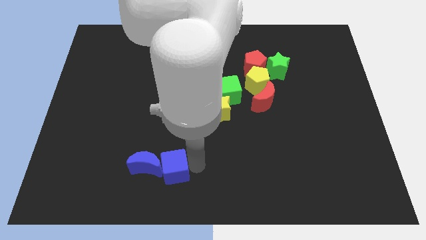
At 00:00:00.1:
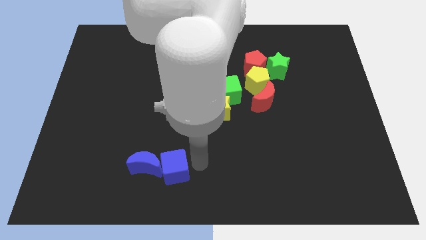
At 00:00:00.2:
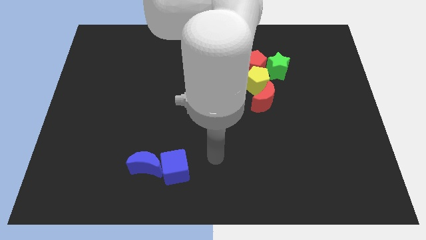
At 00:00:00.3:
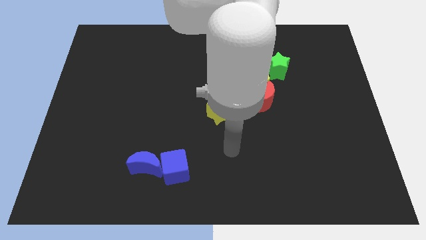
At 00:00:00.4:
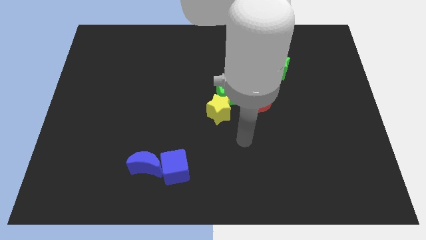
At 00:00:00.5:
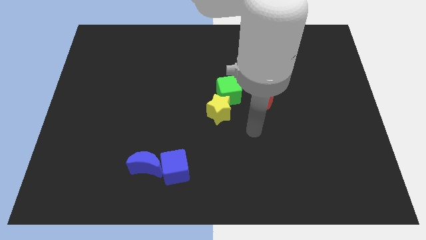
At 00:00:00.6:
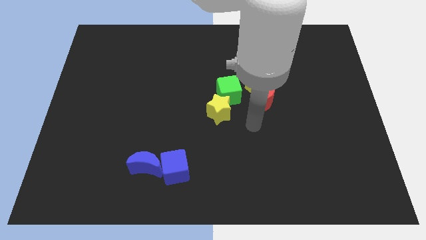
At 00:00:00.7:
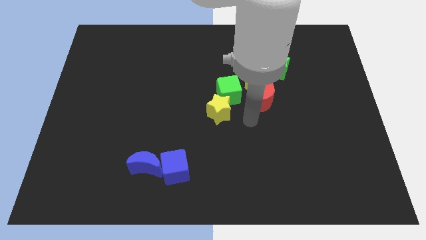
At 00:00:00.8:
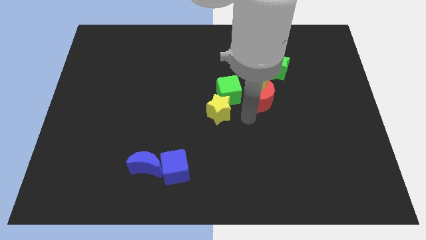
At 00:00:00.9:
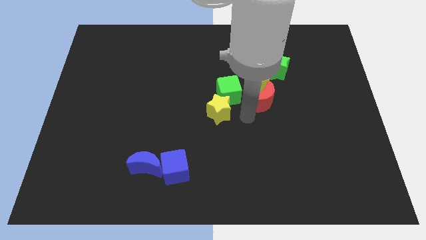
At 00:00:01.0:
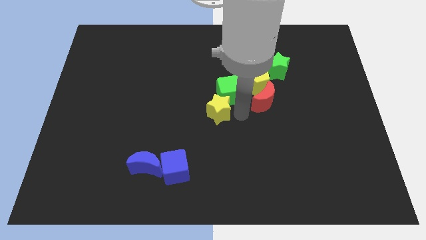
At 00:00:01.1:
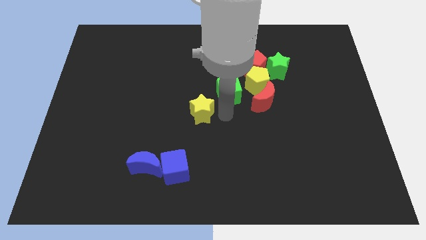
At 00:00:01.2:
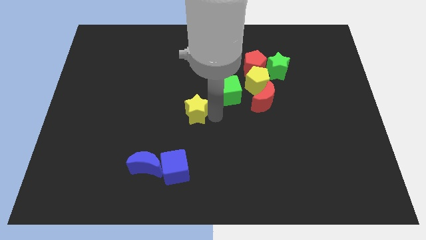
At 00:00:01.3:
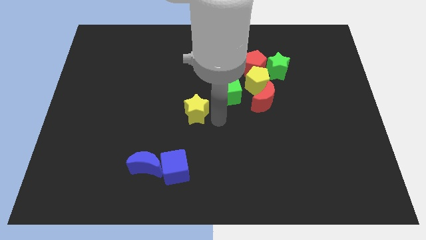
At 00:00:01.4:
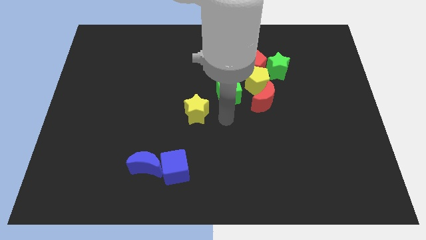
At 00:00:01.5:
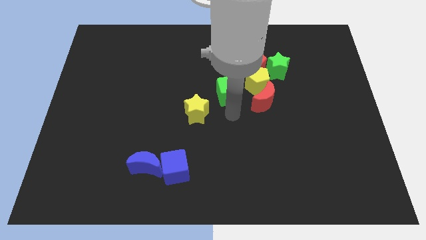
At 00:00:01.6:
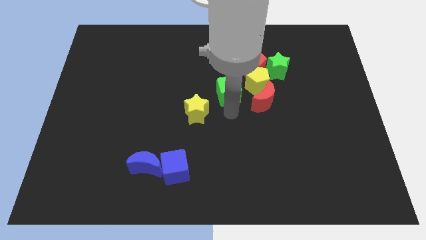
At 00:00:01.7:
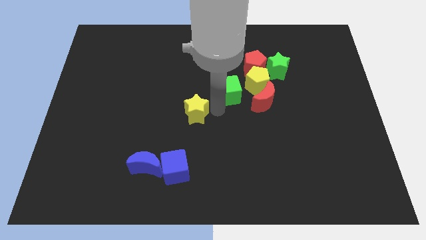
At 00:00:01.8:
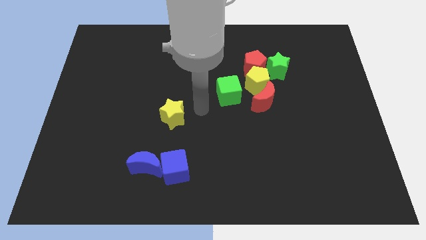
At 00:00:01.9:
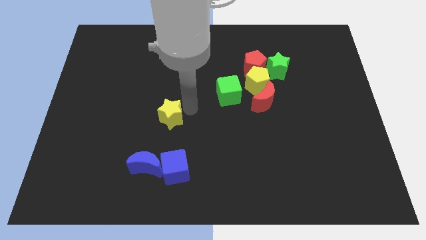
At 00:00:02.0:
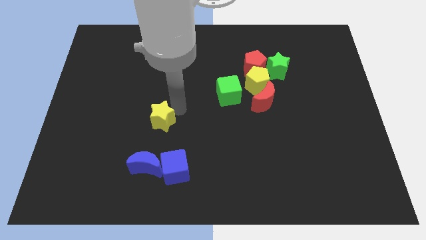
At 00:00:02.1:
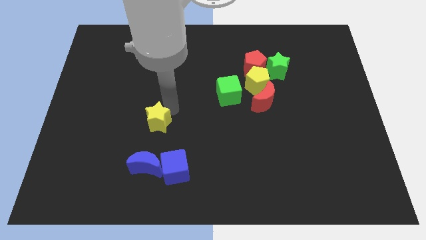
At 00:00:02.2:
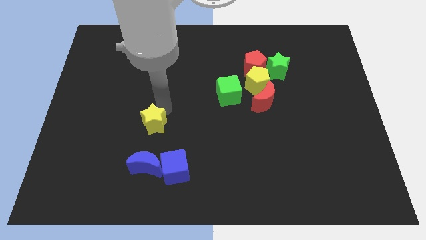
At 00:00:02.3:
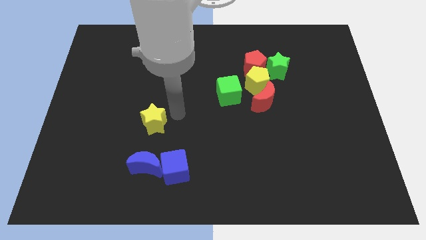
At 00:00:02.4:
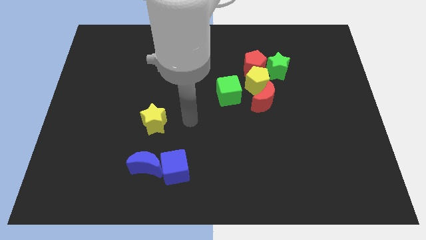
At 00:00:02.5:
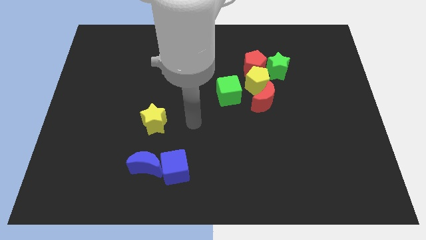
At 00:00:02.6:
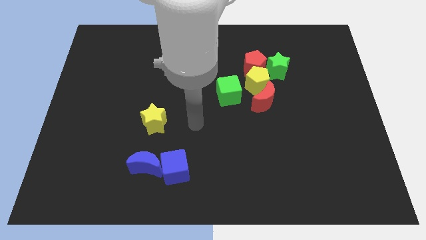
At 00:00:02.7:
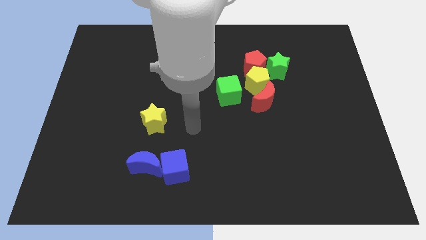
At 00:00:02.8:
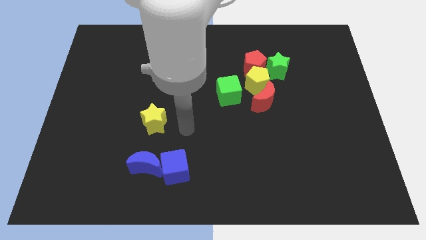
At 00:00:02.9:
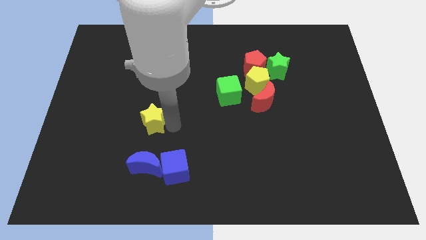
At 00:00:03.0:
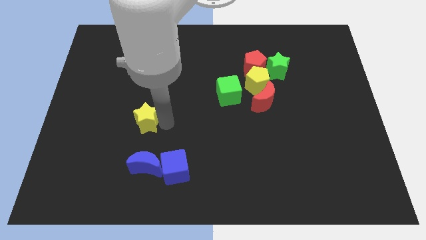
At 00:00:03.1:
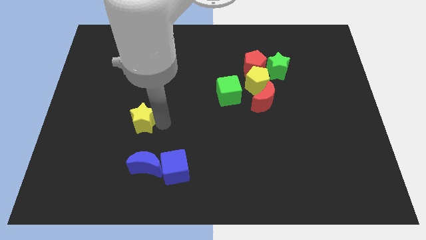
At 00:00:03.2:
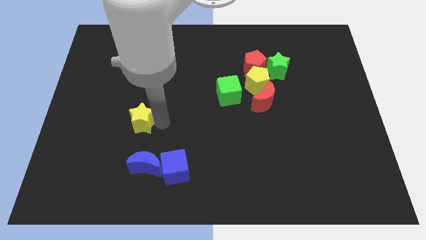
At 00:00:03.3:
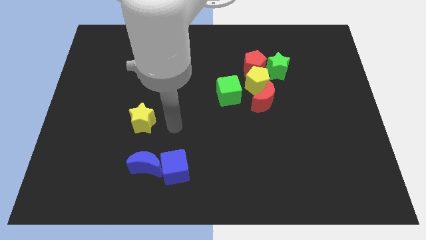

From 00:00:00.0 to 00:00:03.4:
place the yellow star above the blue moon

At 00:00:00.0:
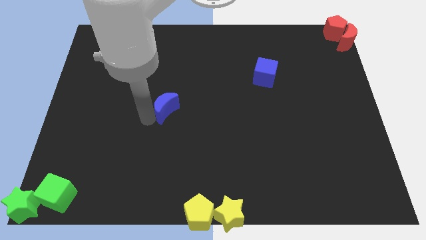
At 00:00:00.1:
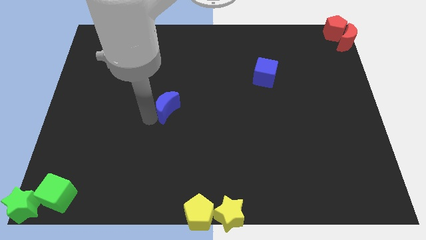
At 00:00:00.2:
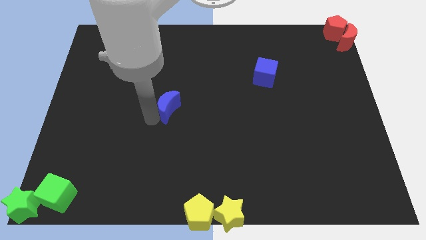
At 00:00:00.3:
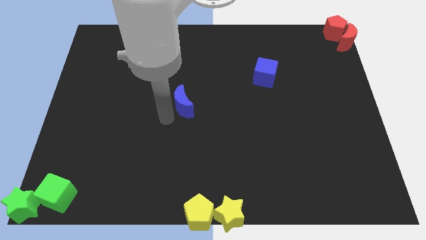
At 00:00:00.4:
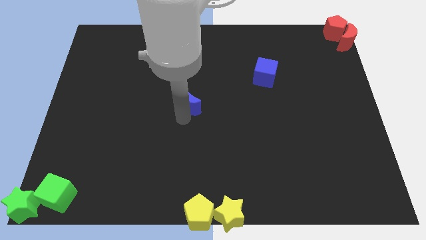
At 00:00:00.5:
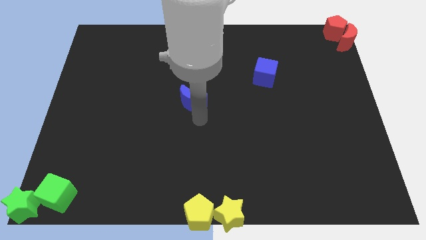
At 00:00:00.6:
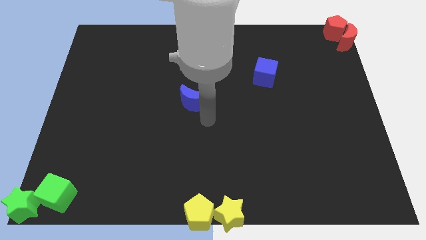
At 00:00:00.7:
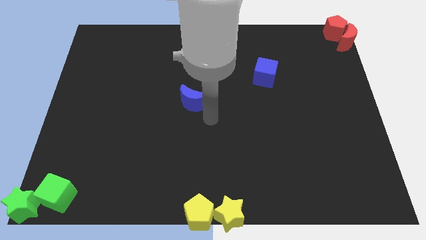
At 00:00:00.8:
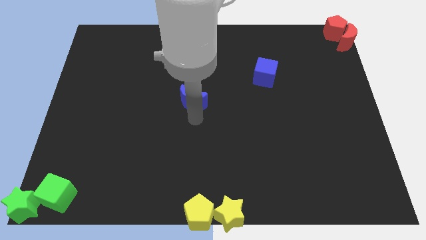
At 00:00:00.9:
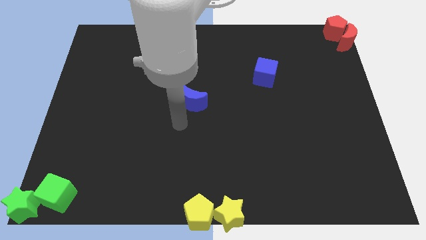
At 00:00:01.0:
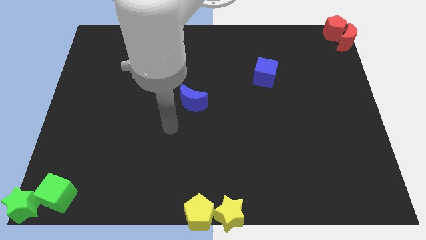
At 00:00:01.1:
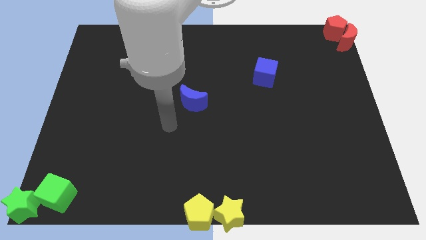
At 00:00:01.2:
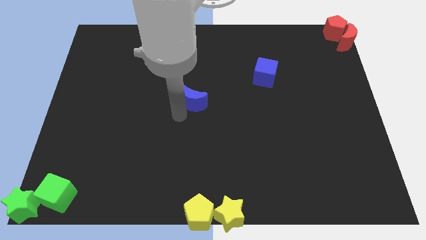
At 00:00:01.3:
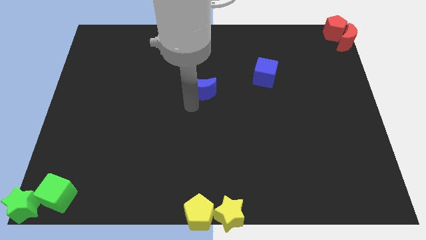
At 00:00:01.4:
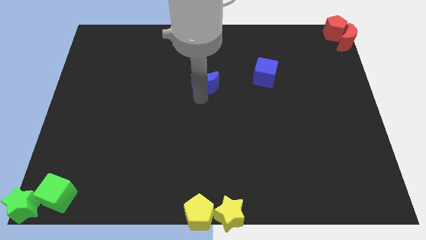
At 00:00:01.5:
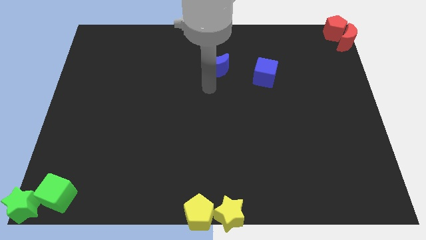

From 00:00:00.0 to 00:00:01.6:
push the blue crescent to the left side of the blue cube

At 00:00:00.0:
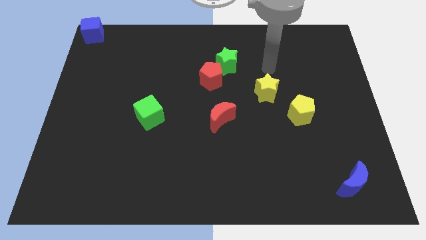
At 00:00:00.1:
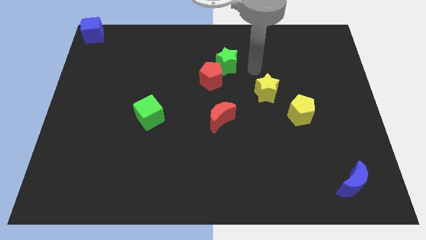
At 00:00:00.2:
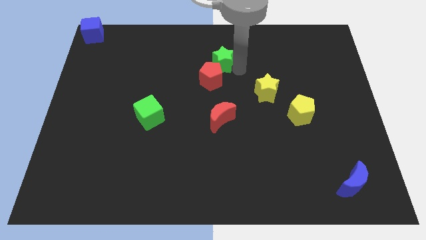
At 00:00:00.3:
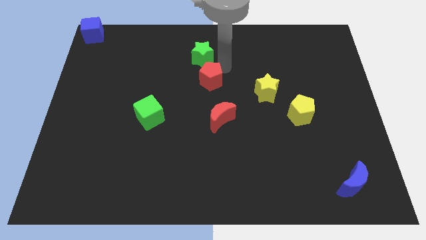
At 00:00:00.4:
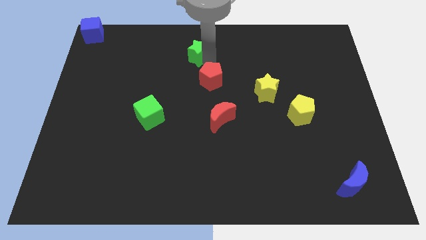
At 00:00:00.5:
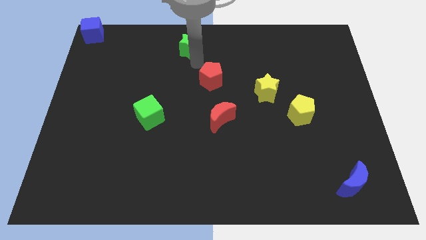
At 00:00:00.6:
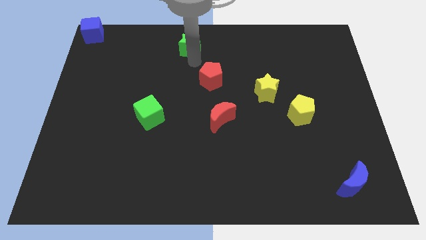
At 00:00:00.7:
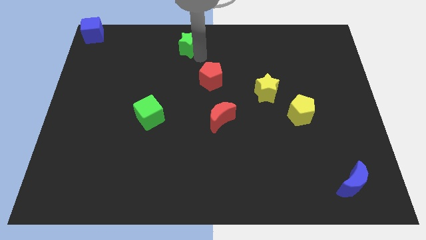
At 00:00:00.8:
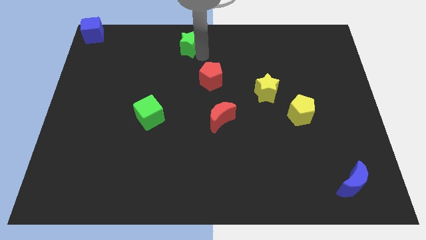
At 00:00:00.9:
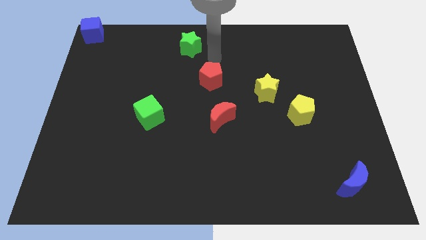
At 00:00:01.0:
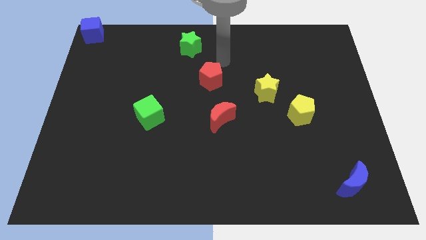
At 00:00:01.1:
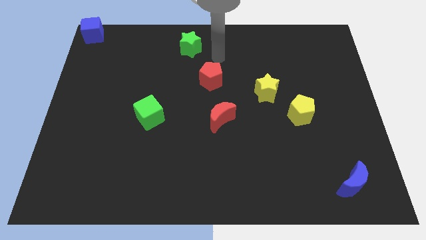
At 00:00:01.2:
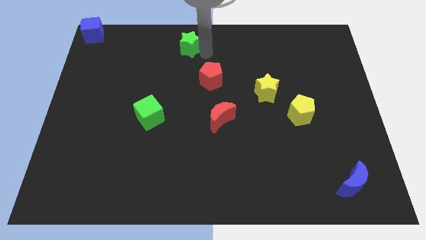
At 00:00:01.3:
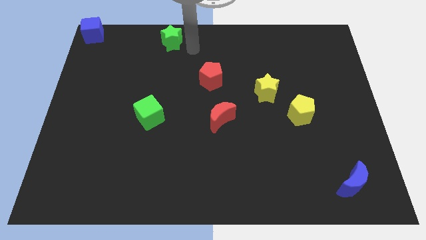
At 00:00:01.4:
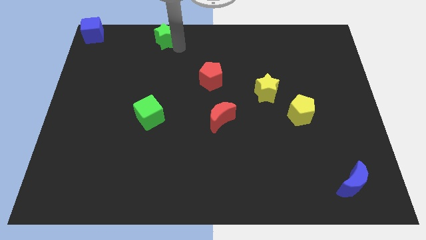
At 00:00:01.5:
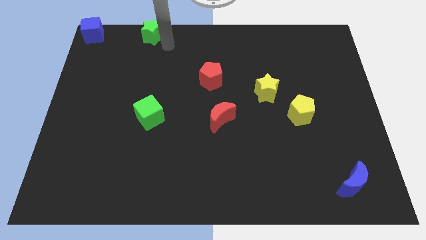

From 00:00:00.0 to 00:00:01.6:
push the green star to the right side of the blue cube

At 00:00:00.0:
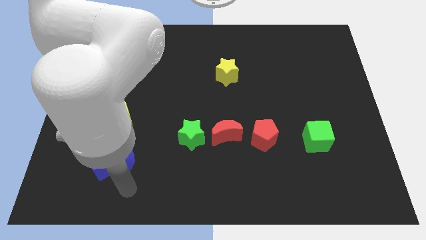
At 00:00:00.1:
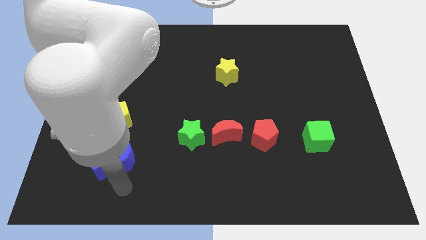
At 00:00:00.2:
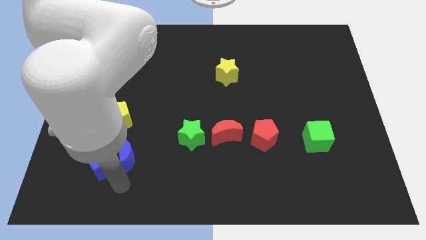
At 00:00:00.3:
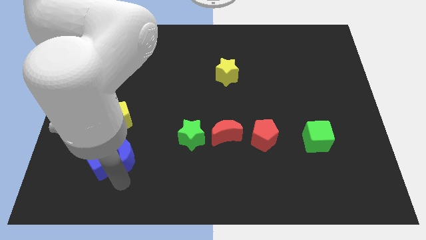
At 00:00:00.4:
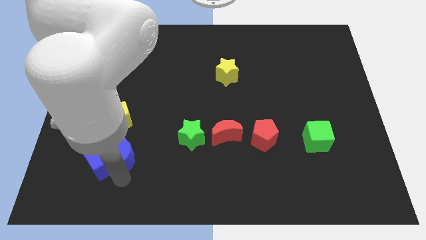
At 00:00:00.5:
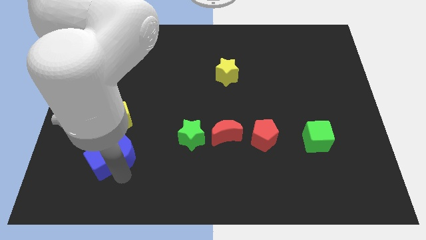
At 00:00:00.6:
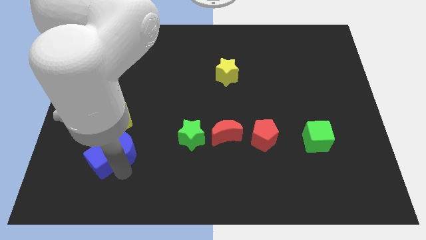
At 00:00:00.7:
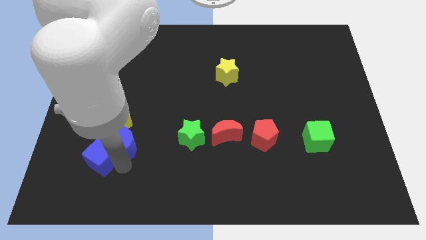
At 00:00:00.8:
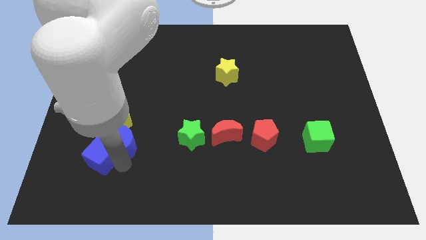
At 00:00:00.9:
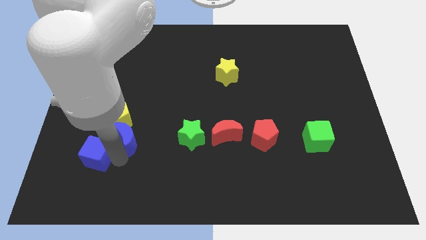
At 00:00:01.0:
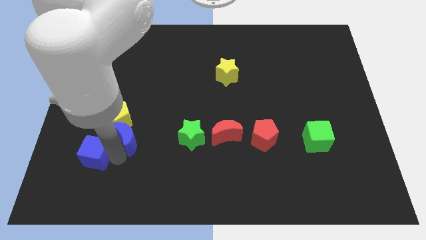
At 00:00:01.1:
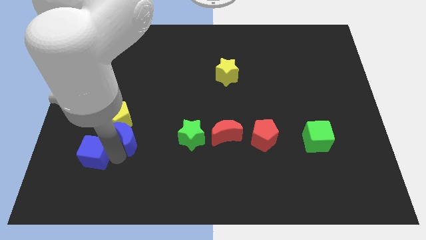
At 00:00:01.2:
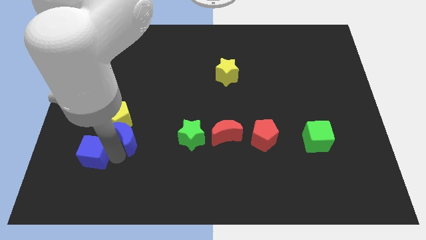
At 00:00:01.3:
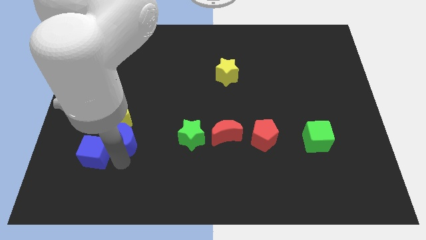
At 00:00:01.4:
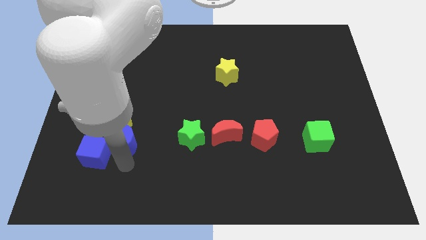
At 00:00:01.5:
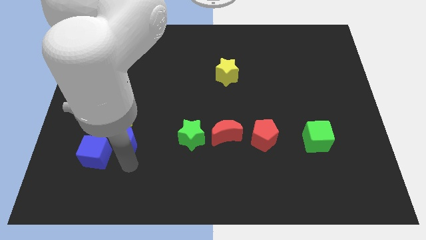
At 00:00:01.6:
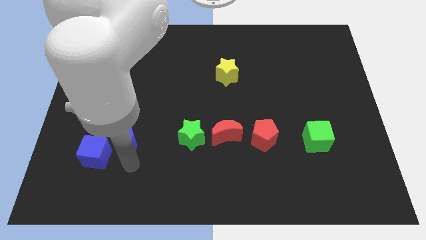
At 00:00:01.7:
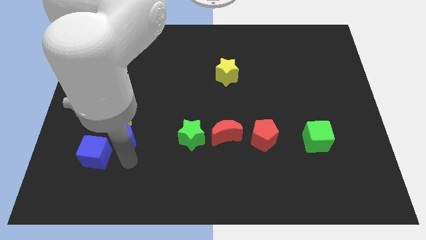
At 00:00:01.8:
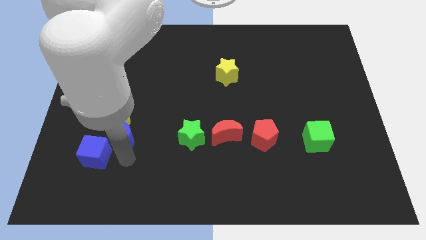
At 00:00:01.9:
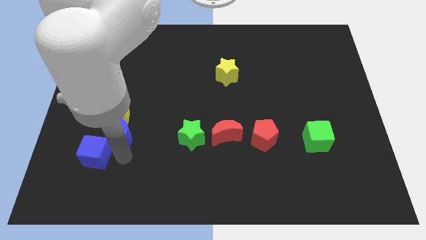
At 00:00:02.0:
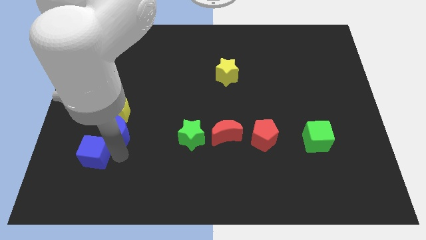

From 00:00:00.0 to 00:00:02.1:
separate the blue blocks below yellow pentagon

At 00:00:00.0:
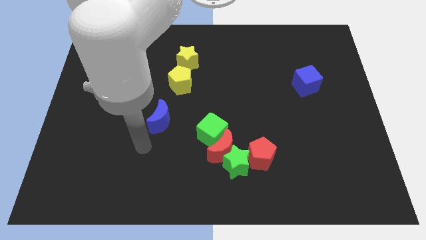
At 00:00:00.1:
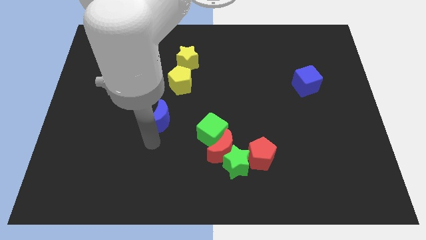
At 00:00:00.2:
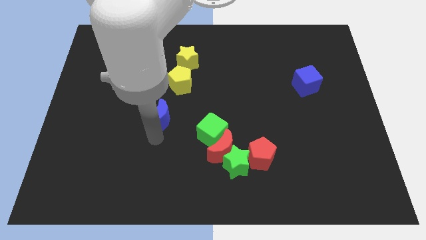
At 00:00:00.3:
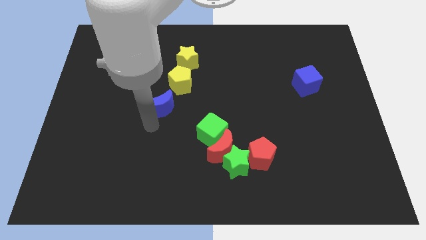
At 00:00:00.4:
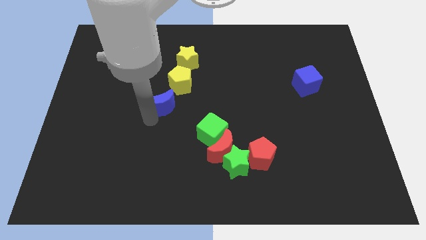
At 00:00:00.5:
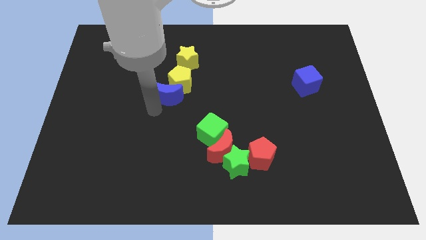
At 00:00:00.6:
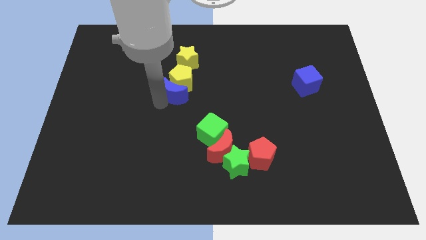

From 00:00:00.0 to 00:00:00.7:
slide blue crescent into yellow pentagon
